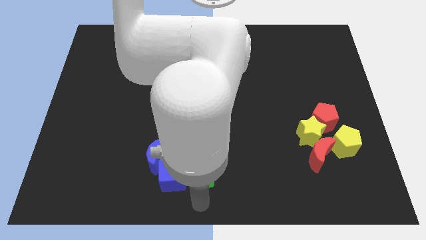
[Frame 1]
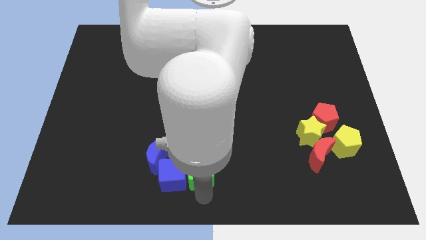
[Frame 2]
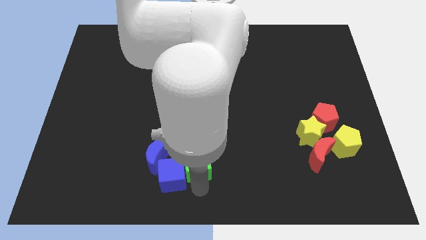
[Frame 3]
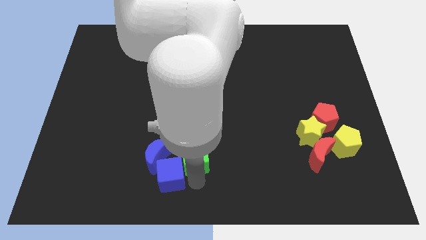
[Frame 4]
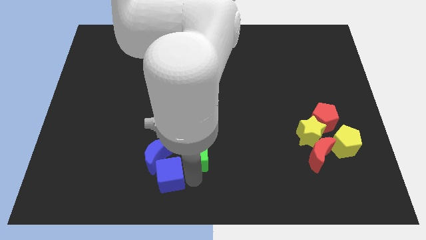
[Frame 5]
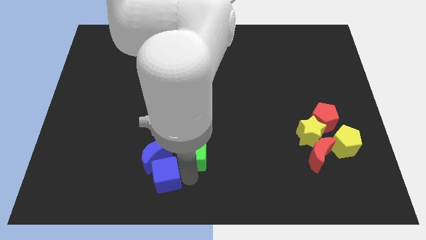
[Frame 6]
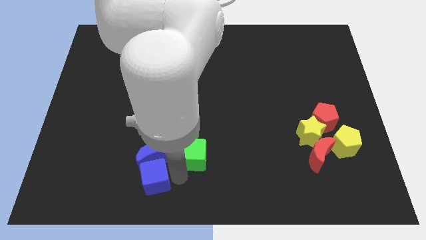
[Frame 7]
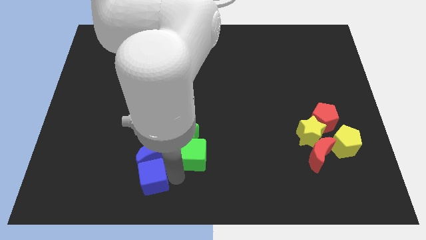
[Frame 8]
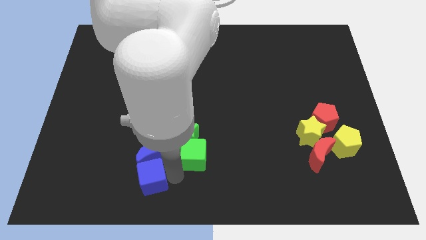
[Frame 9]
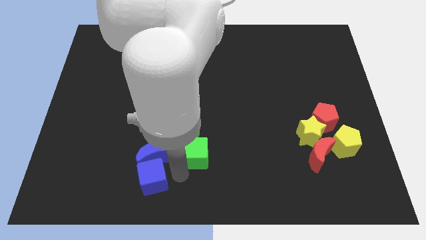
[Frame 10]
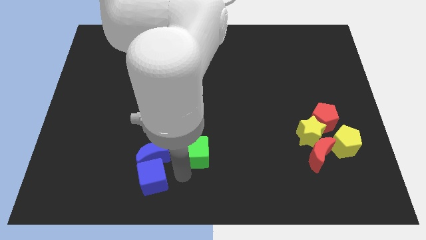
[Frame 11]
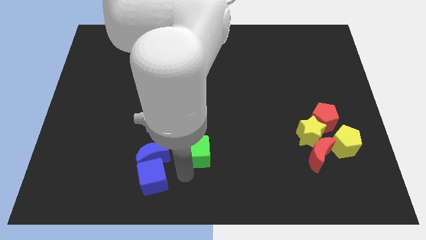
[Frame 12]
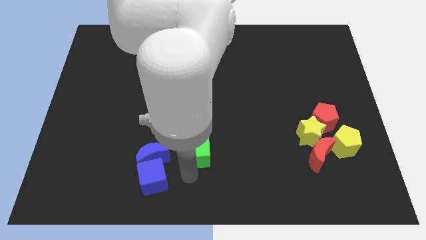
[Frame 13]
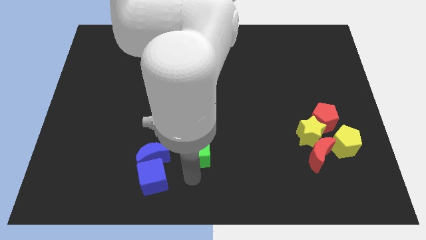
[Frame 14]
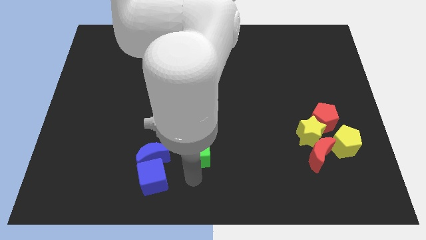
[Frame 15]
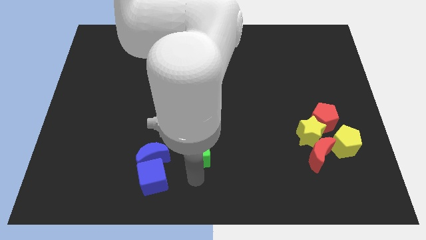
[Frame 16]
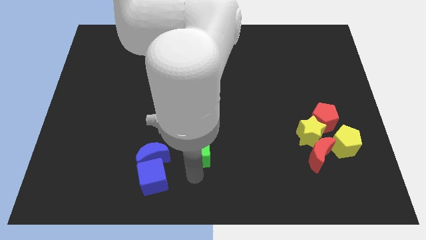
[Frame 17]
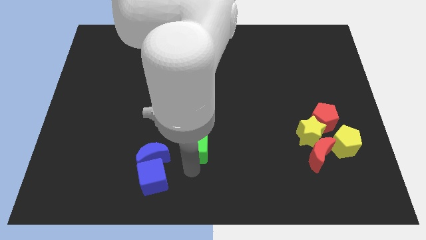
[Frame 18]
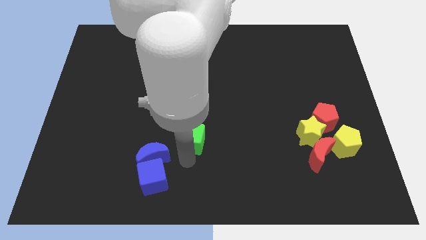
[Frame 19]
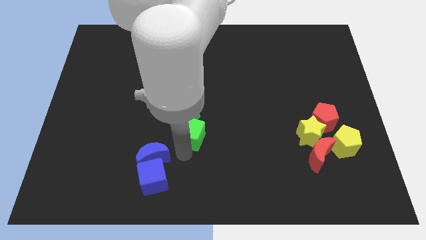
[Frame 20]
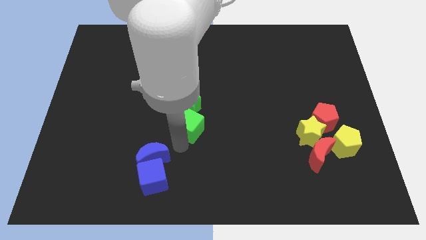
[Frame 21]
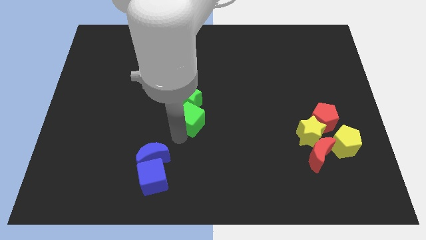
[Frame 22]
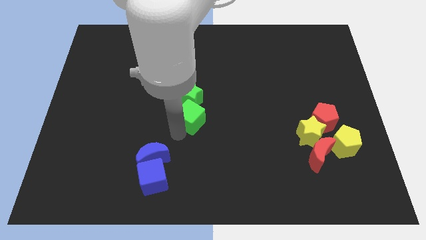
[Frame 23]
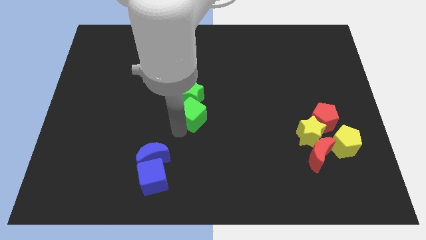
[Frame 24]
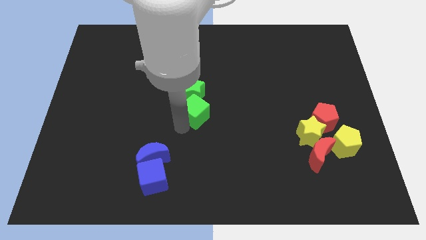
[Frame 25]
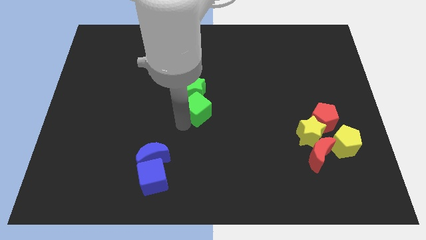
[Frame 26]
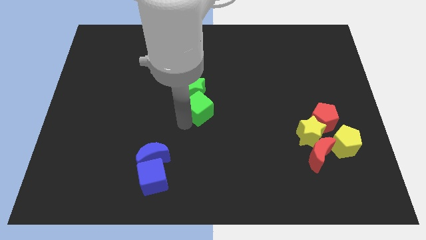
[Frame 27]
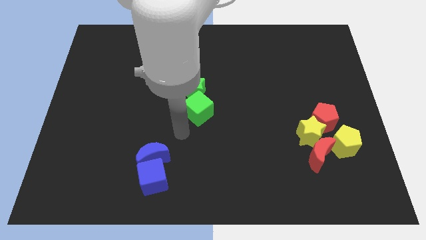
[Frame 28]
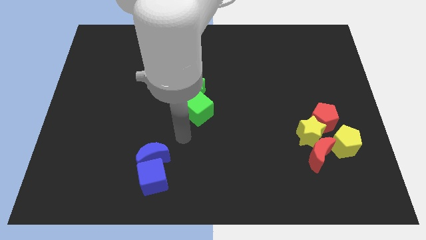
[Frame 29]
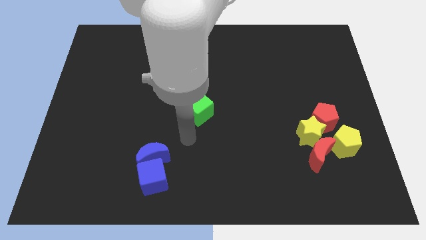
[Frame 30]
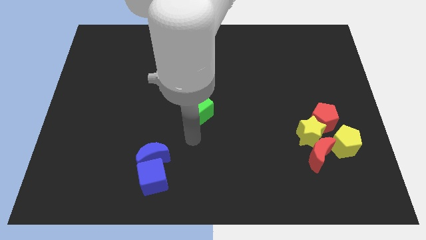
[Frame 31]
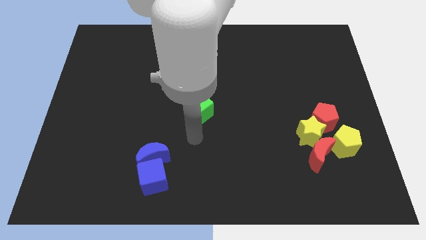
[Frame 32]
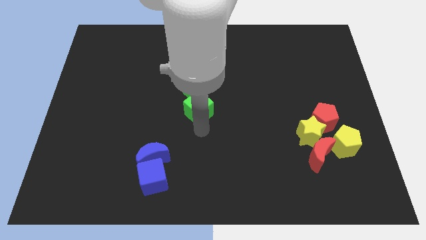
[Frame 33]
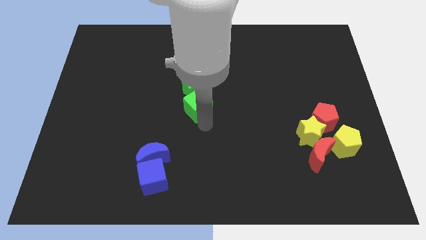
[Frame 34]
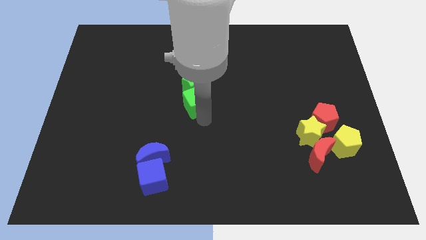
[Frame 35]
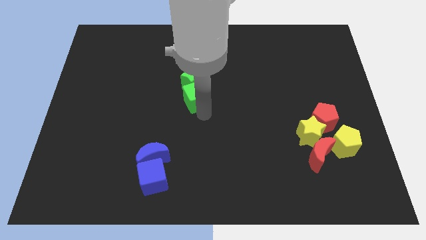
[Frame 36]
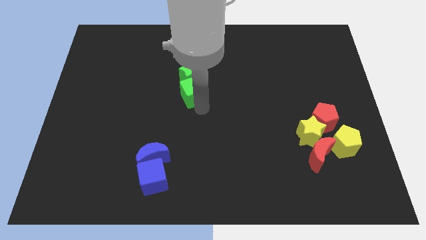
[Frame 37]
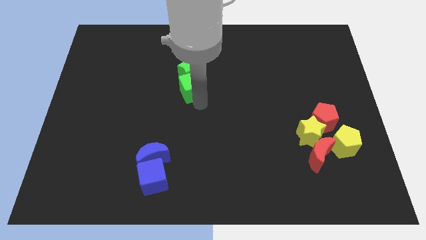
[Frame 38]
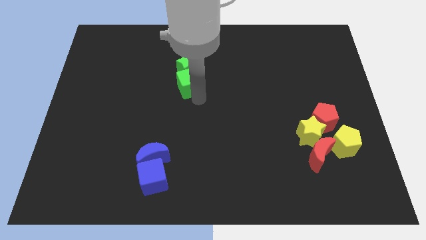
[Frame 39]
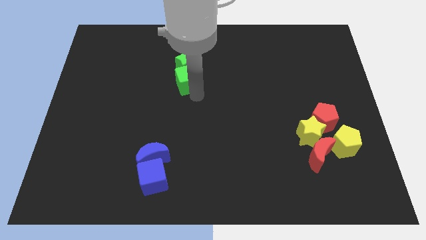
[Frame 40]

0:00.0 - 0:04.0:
separate blue blocks and green blocks

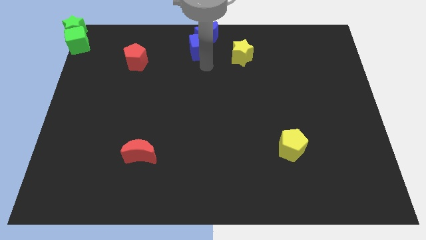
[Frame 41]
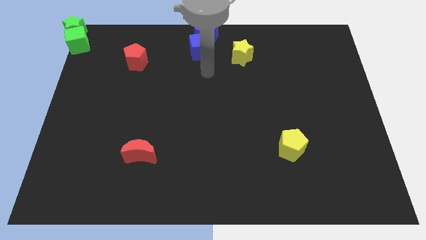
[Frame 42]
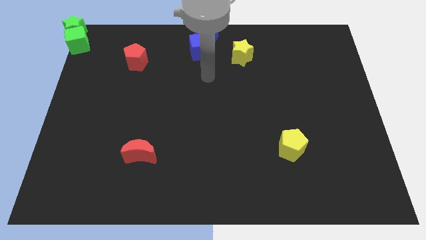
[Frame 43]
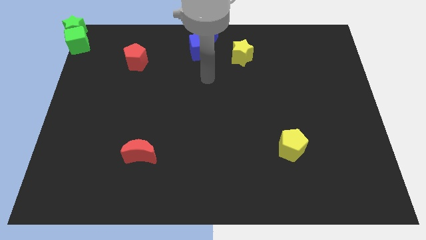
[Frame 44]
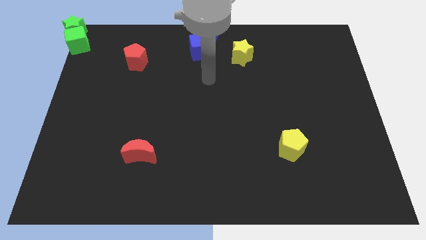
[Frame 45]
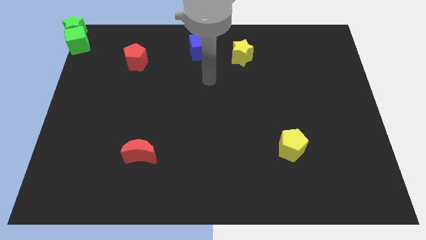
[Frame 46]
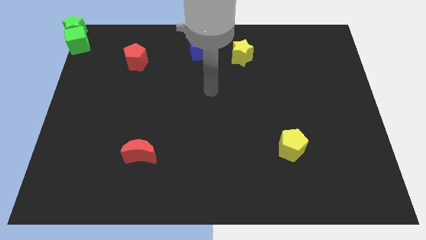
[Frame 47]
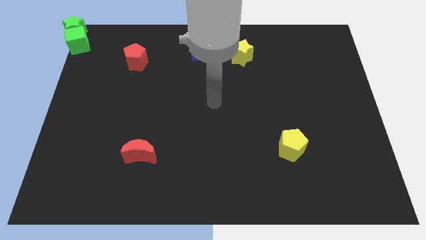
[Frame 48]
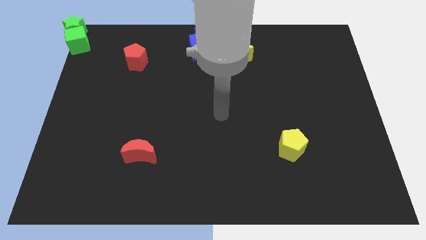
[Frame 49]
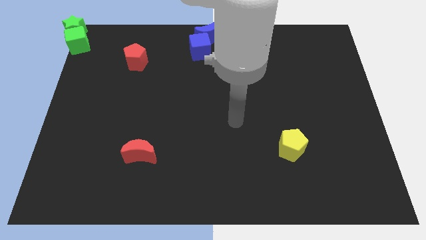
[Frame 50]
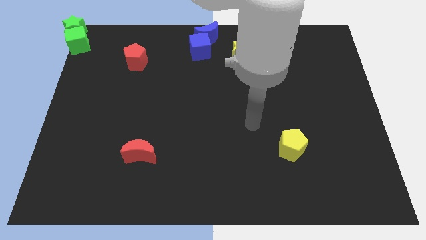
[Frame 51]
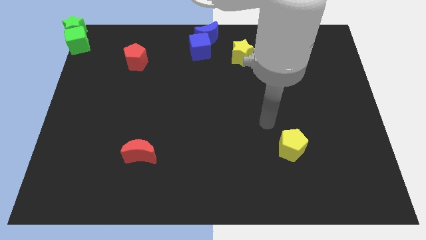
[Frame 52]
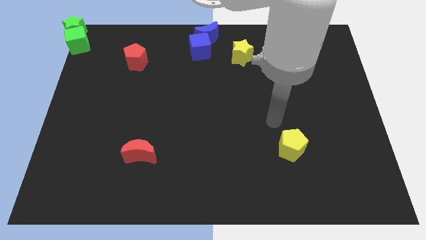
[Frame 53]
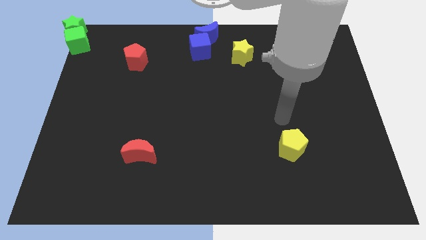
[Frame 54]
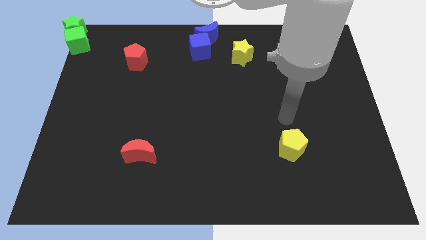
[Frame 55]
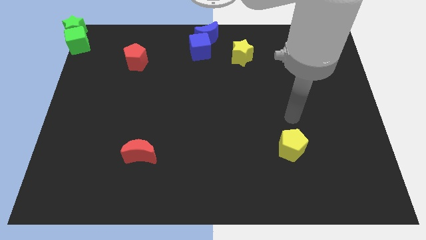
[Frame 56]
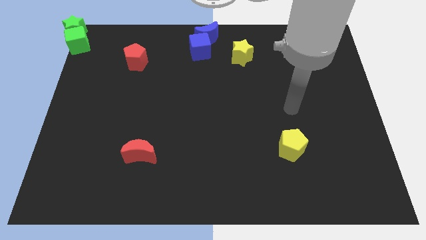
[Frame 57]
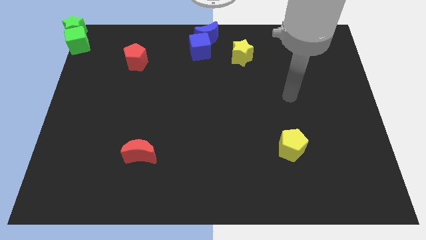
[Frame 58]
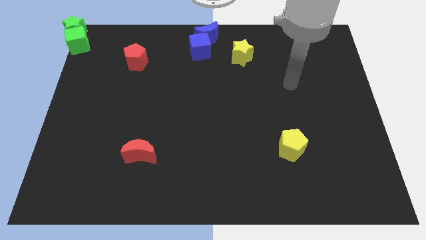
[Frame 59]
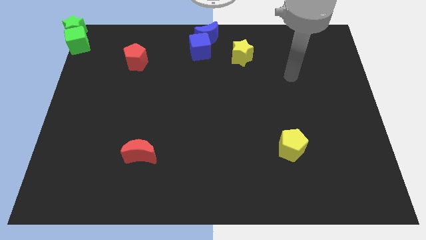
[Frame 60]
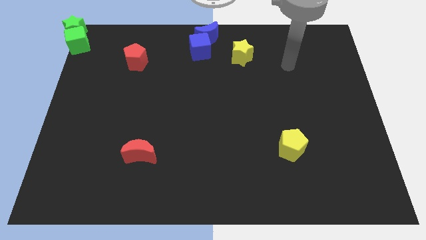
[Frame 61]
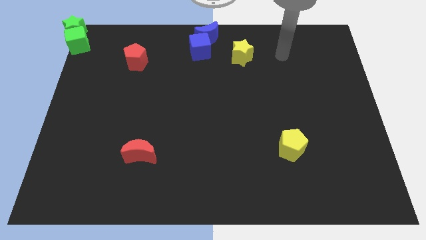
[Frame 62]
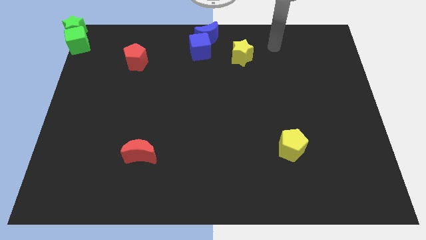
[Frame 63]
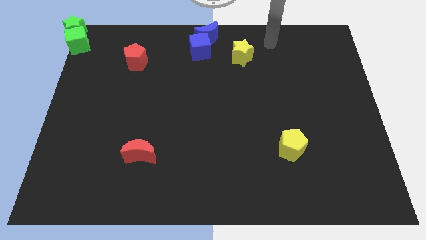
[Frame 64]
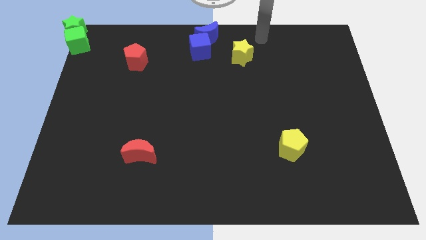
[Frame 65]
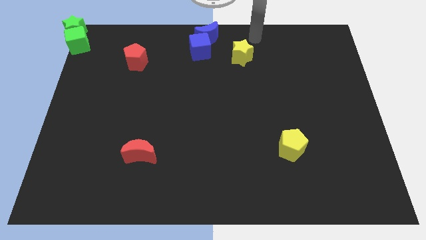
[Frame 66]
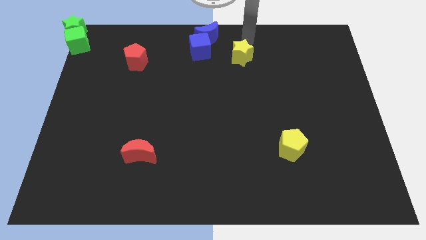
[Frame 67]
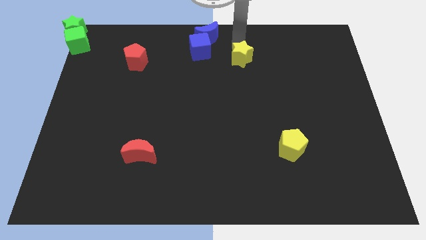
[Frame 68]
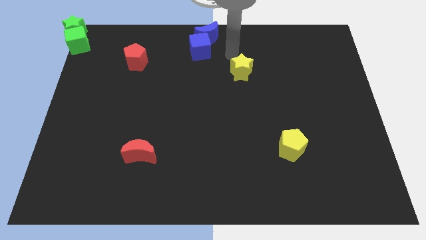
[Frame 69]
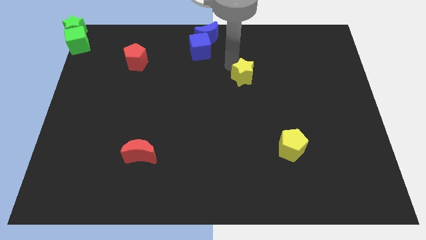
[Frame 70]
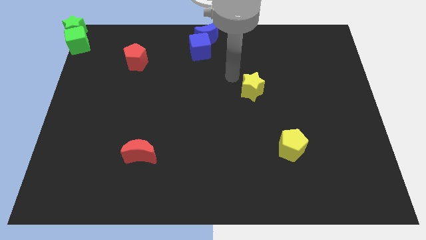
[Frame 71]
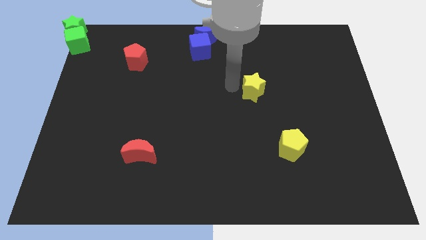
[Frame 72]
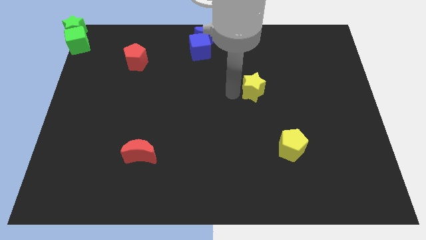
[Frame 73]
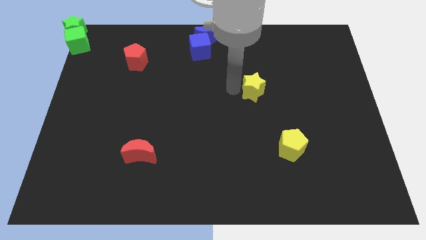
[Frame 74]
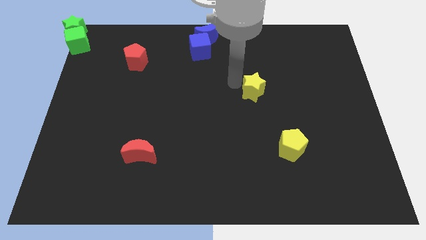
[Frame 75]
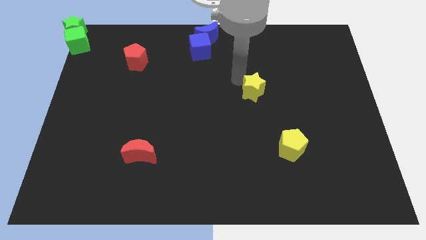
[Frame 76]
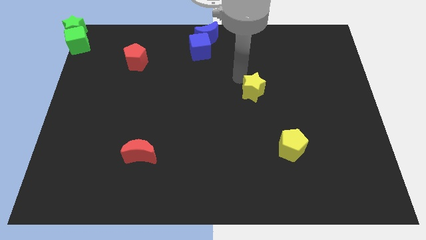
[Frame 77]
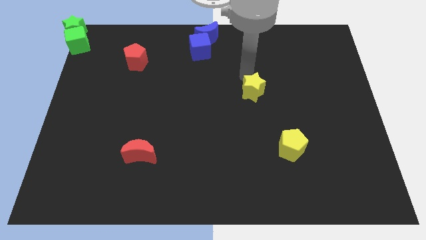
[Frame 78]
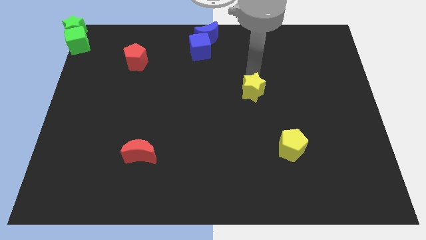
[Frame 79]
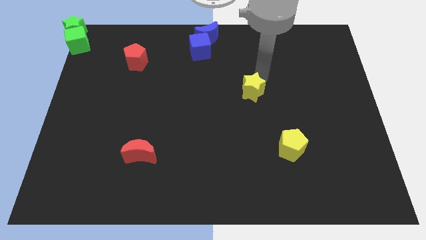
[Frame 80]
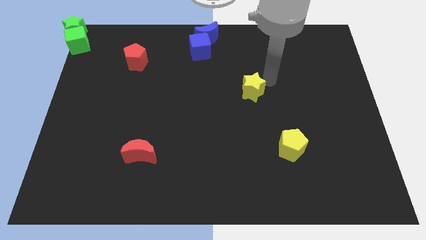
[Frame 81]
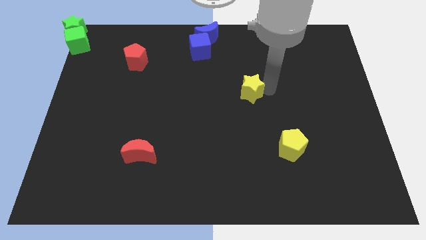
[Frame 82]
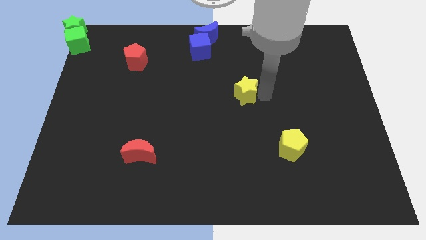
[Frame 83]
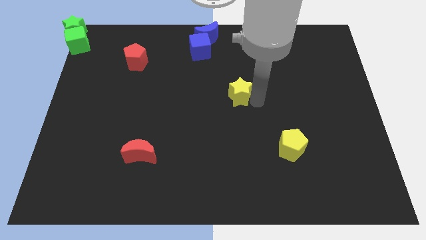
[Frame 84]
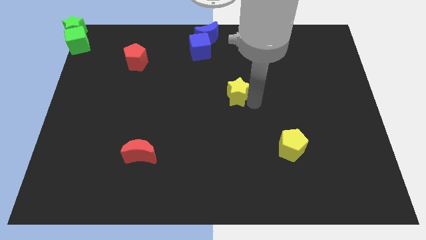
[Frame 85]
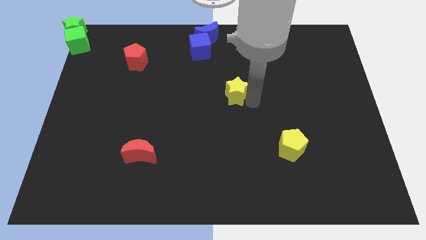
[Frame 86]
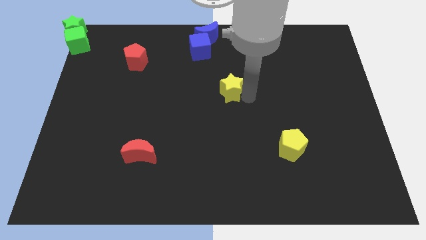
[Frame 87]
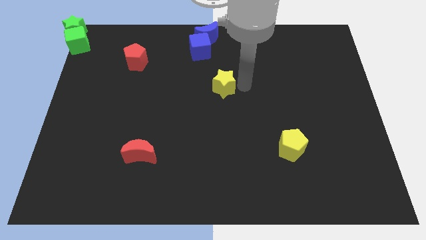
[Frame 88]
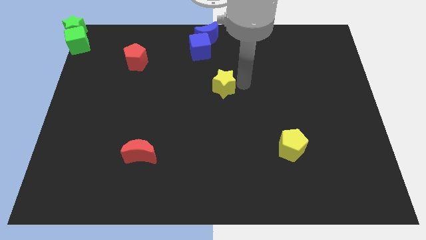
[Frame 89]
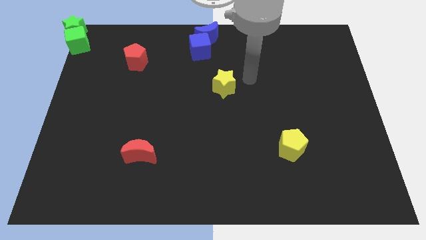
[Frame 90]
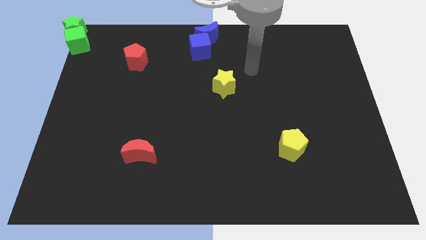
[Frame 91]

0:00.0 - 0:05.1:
move the yellow star diagonally to yellow pentagon
